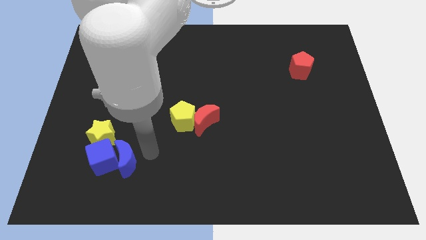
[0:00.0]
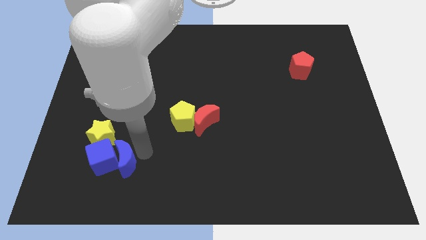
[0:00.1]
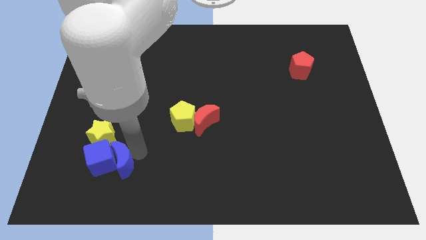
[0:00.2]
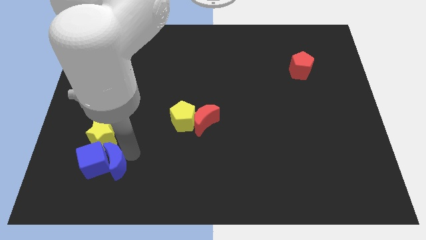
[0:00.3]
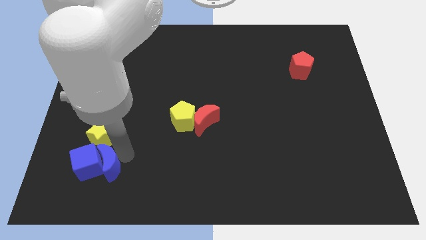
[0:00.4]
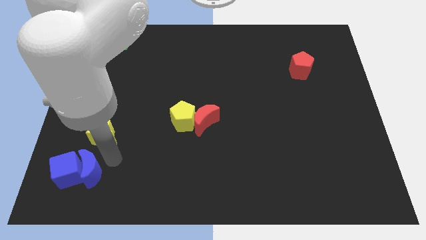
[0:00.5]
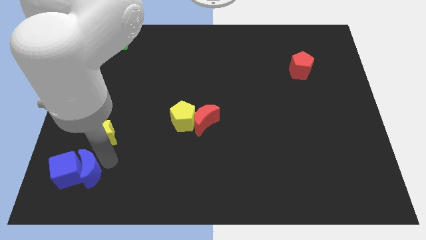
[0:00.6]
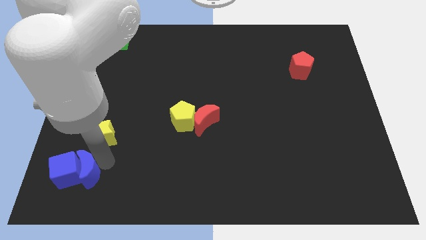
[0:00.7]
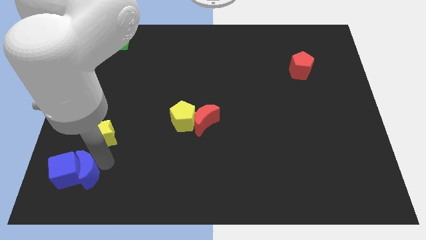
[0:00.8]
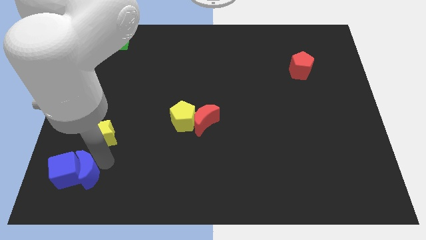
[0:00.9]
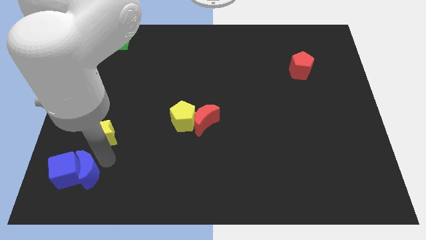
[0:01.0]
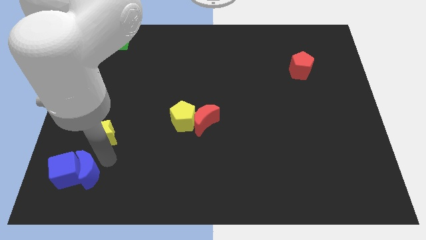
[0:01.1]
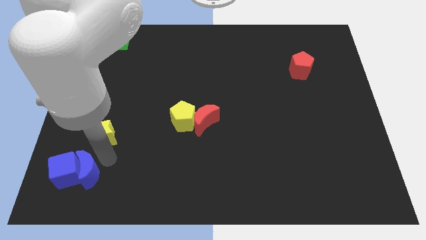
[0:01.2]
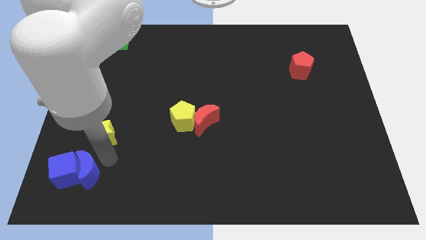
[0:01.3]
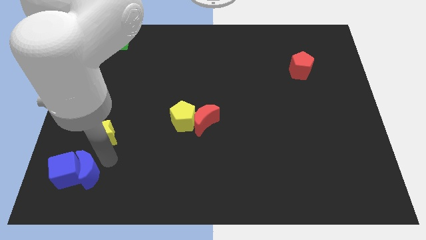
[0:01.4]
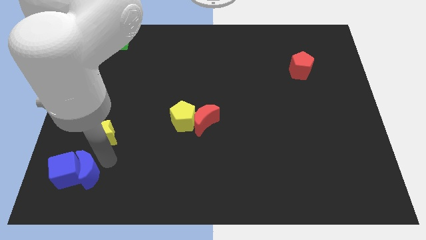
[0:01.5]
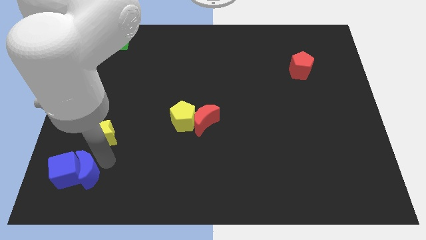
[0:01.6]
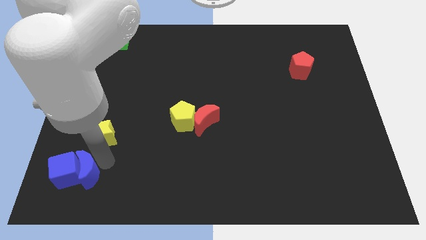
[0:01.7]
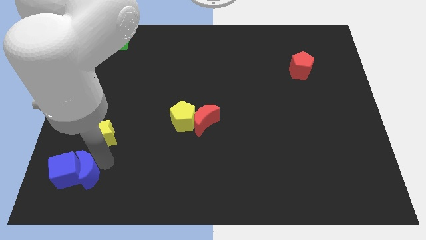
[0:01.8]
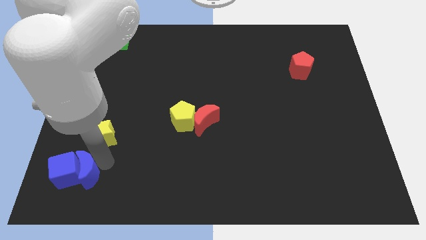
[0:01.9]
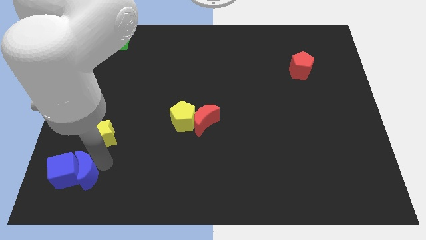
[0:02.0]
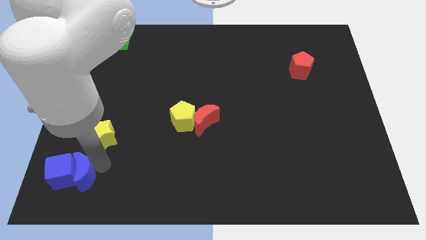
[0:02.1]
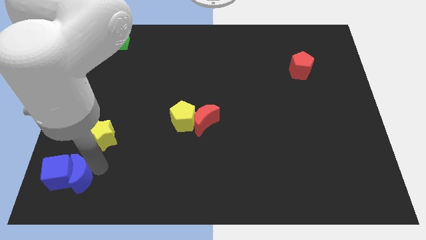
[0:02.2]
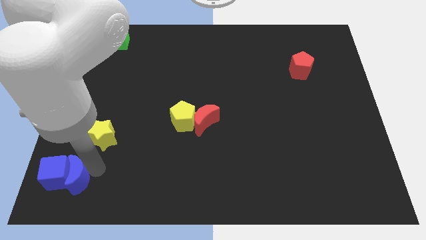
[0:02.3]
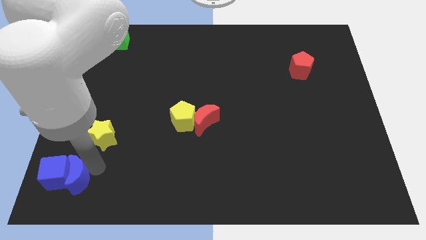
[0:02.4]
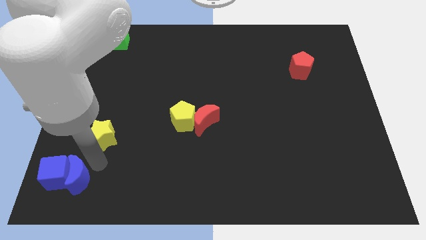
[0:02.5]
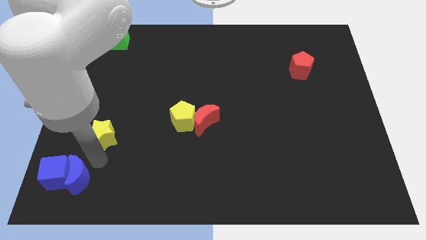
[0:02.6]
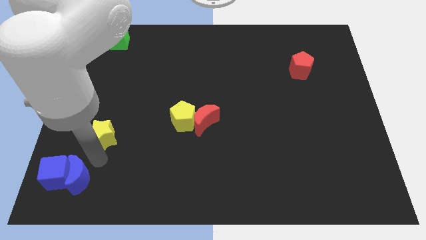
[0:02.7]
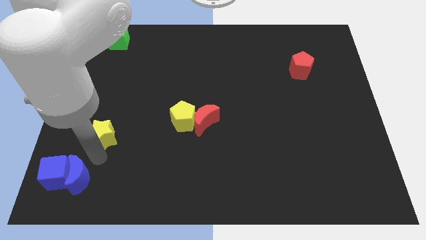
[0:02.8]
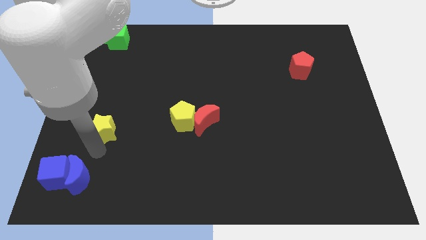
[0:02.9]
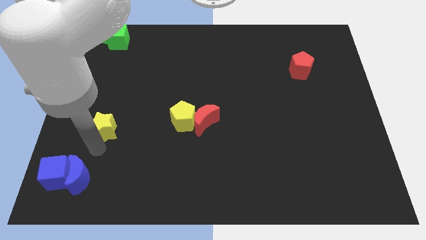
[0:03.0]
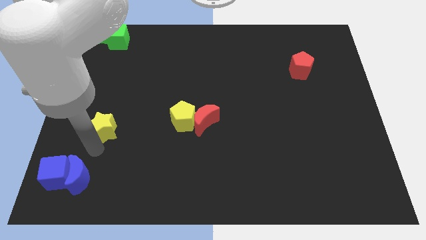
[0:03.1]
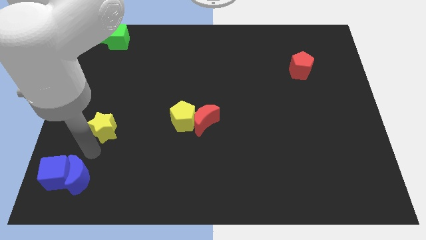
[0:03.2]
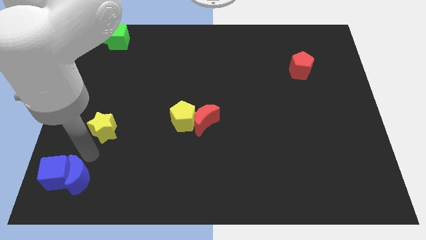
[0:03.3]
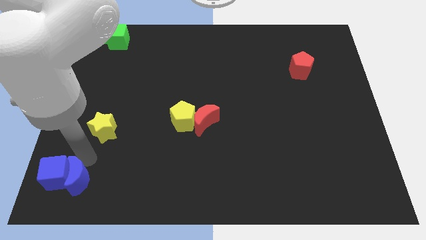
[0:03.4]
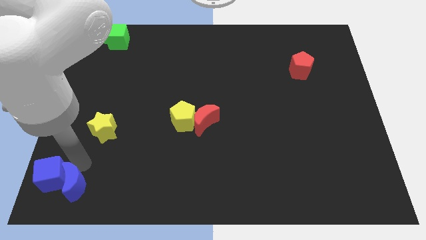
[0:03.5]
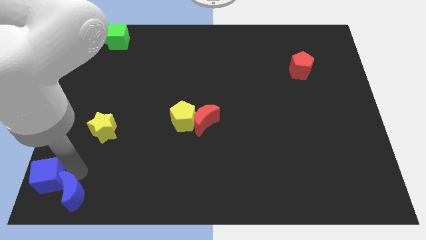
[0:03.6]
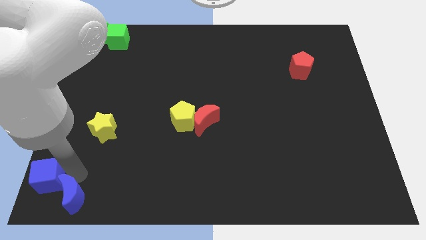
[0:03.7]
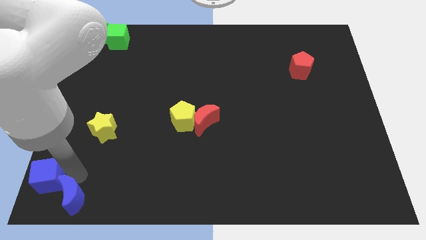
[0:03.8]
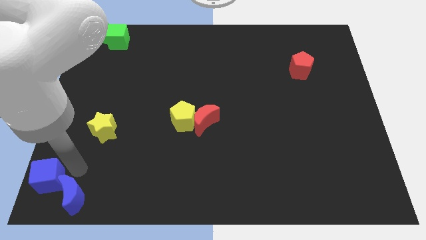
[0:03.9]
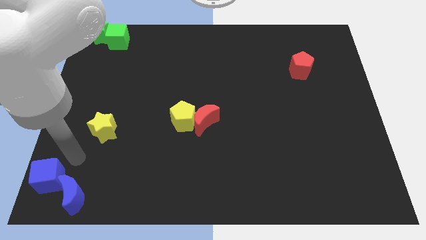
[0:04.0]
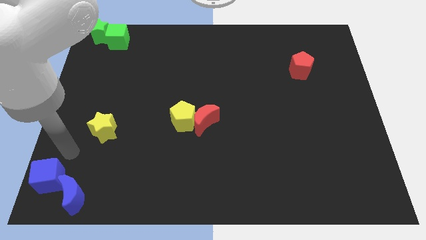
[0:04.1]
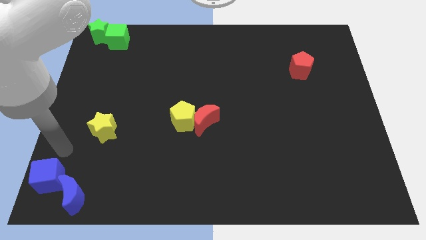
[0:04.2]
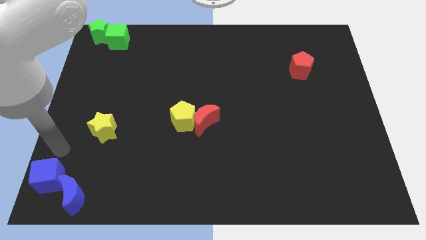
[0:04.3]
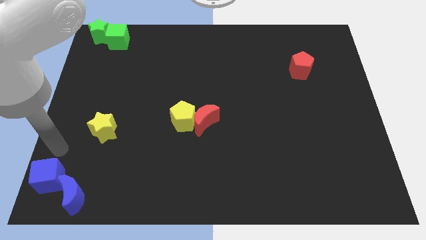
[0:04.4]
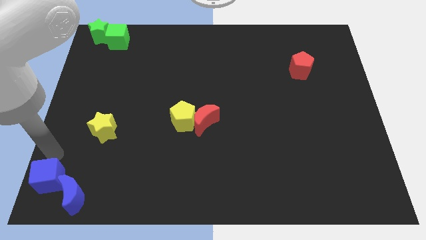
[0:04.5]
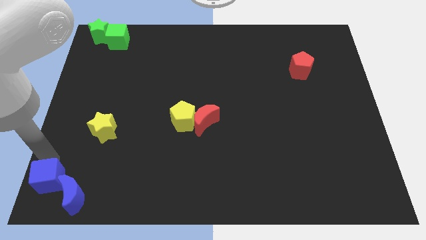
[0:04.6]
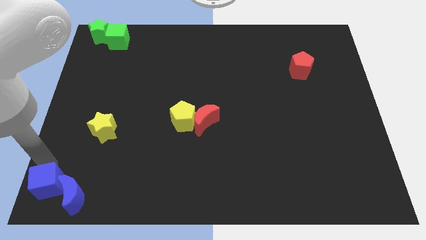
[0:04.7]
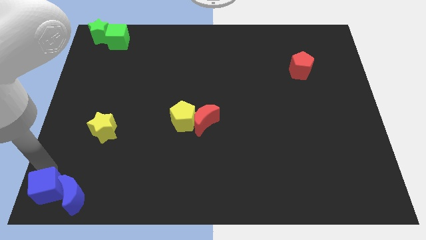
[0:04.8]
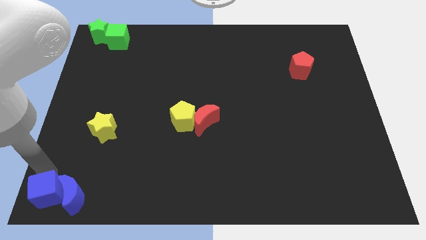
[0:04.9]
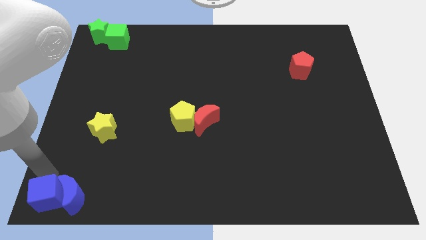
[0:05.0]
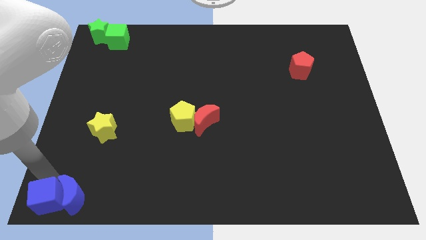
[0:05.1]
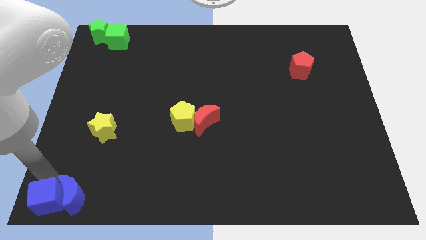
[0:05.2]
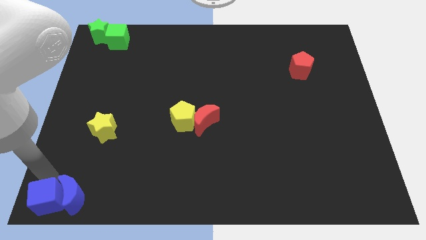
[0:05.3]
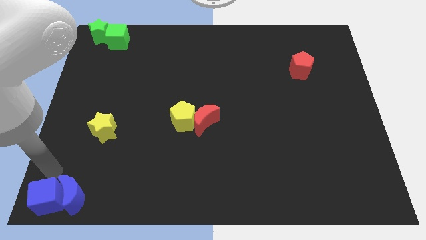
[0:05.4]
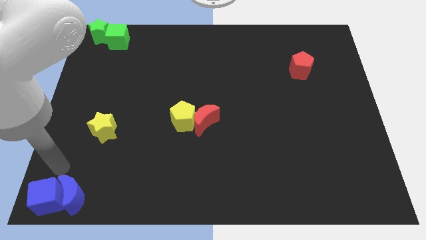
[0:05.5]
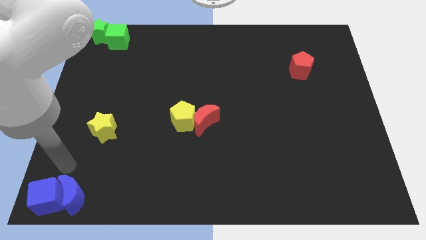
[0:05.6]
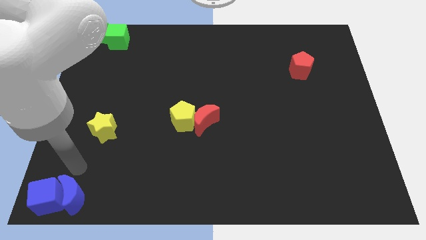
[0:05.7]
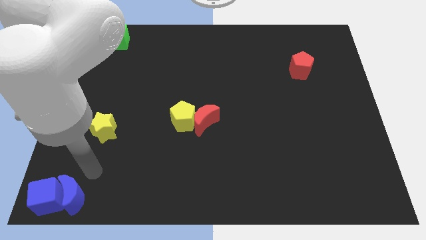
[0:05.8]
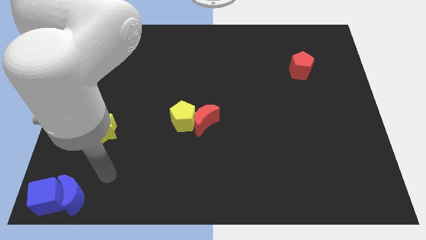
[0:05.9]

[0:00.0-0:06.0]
move blue crescent along with blue cube to the bottom left corner of the board

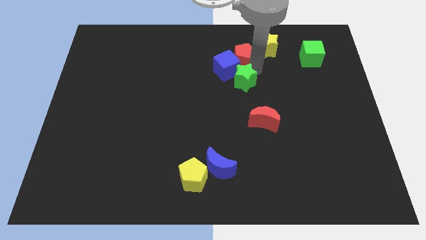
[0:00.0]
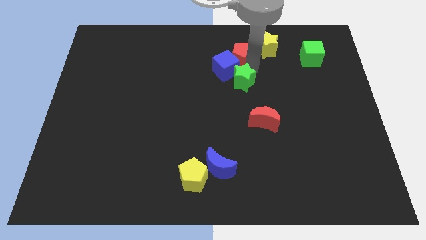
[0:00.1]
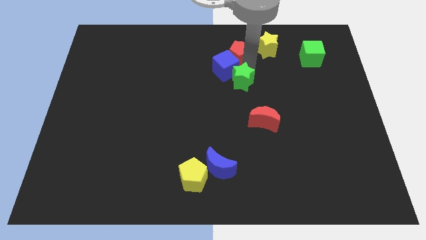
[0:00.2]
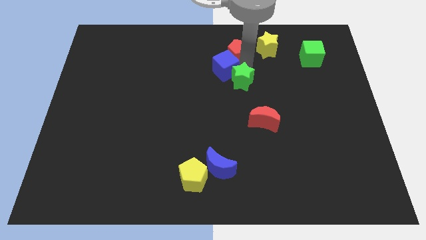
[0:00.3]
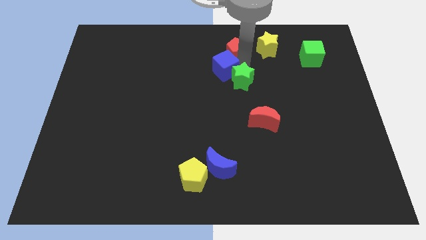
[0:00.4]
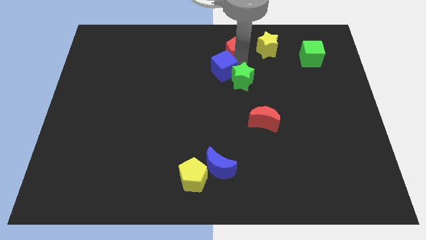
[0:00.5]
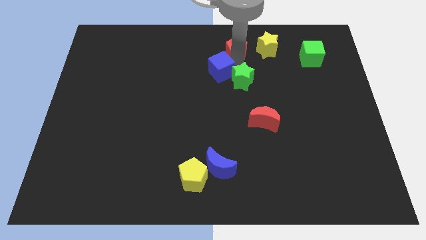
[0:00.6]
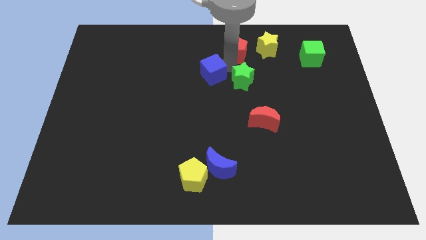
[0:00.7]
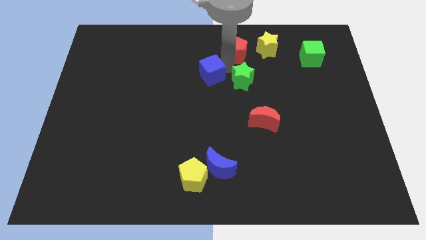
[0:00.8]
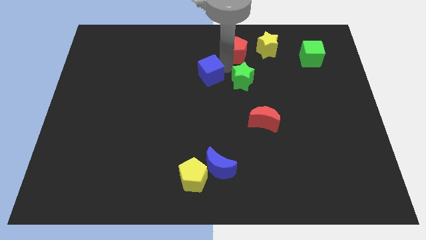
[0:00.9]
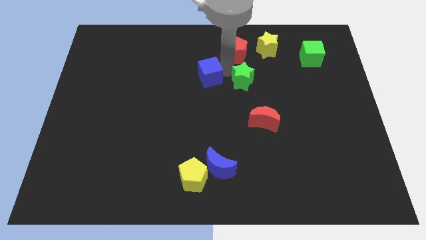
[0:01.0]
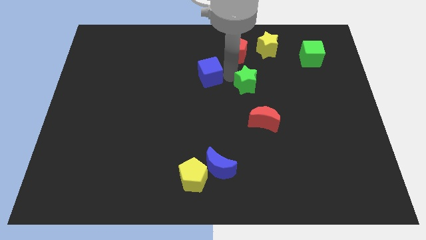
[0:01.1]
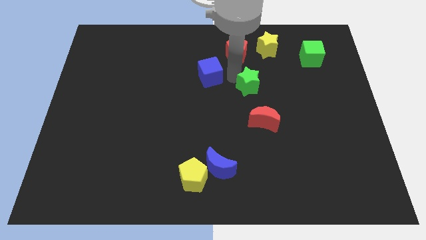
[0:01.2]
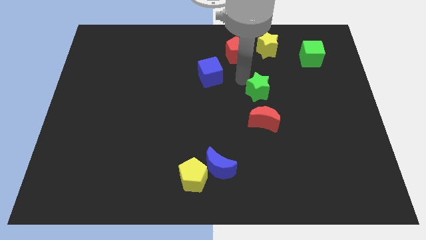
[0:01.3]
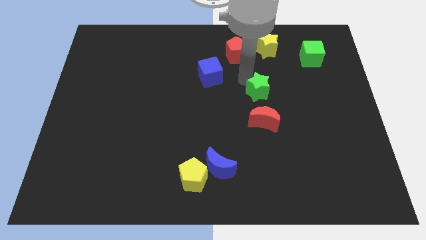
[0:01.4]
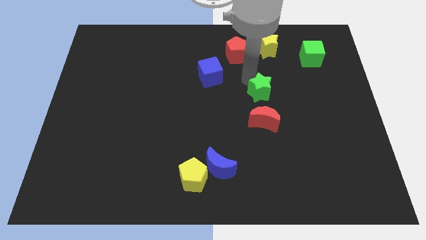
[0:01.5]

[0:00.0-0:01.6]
separate the green star from the blue cube

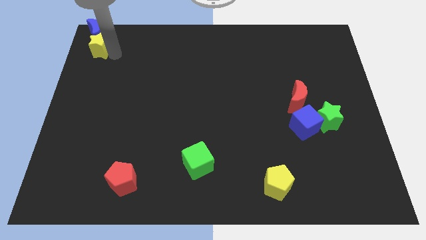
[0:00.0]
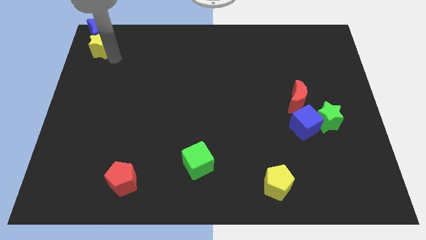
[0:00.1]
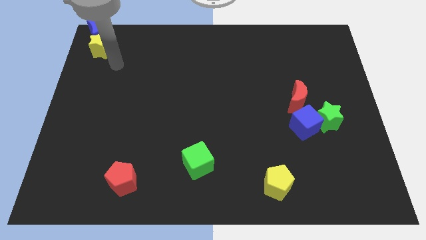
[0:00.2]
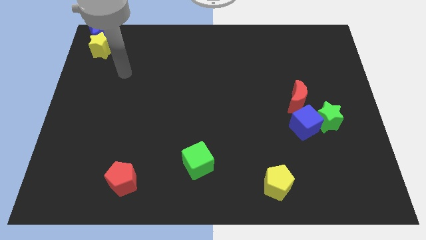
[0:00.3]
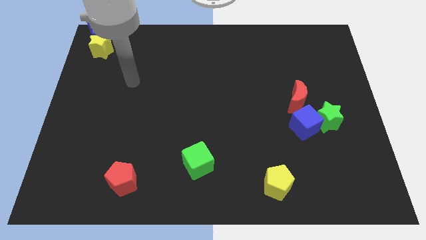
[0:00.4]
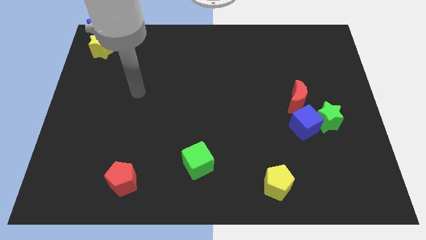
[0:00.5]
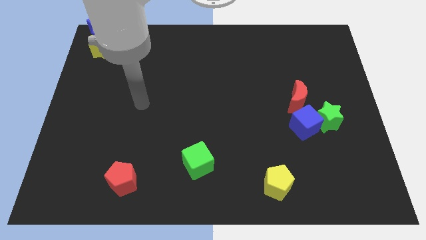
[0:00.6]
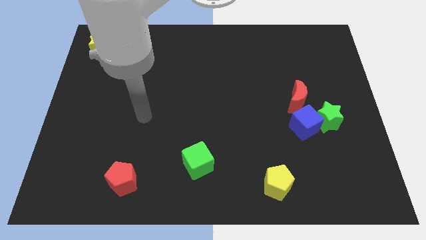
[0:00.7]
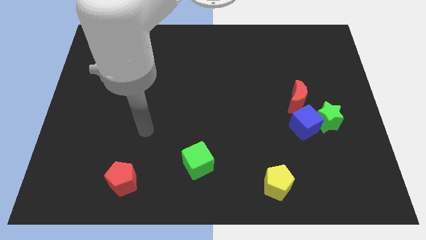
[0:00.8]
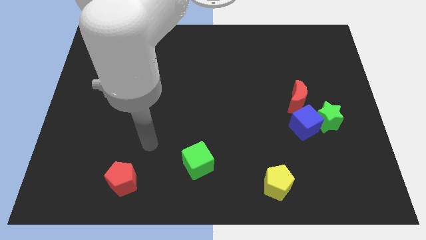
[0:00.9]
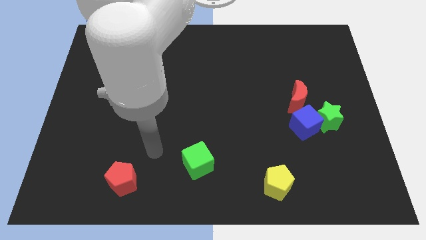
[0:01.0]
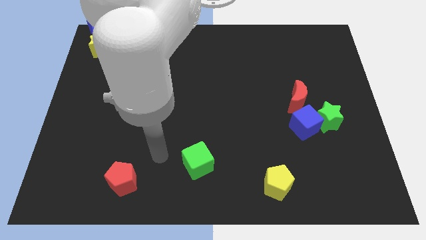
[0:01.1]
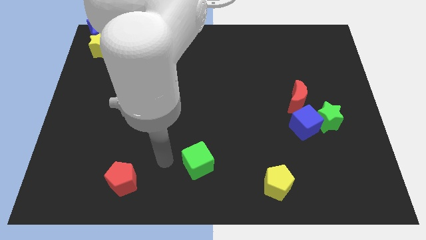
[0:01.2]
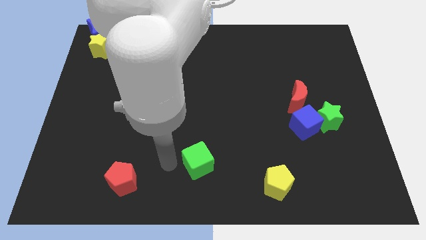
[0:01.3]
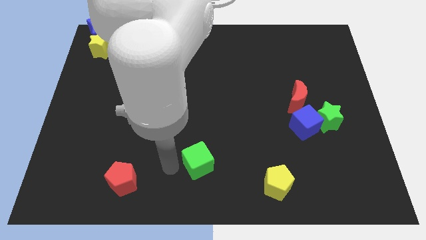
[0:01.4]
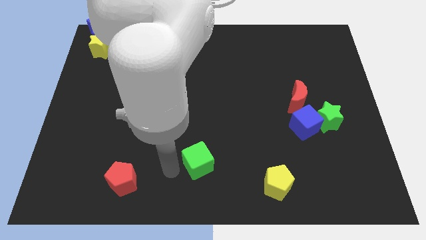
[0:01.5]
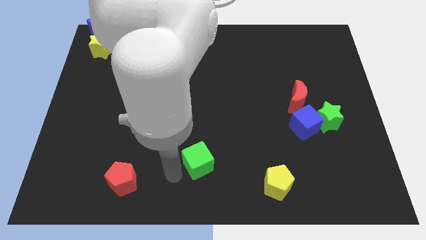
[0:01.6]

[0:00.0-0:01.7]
point the arm in between the green cube and red pentagon
